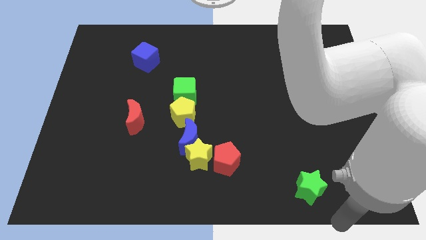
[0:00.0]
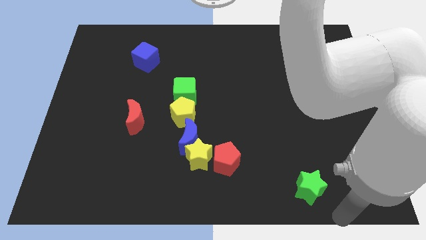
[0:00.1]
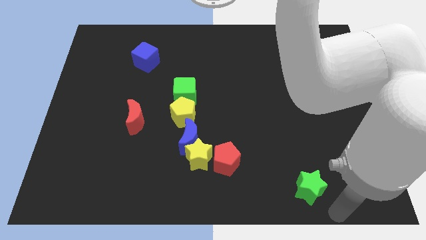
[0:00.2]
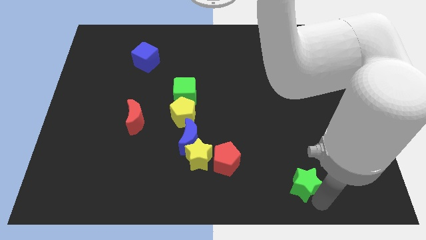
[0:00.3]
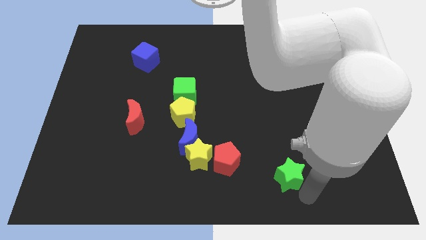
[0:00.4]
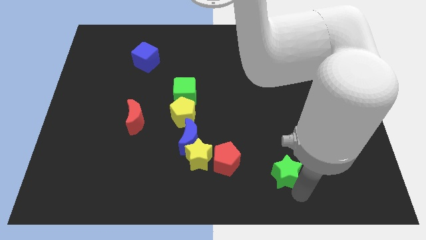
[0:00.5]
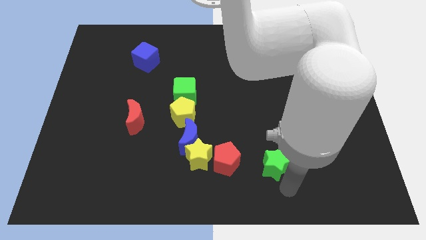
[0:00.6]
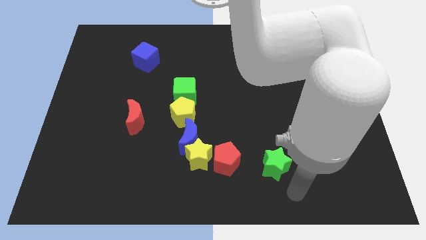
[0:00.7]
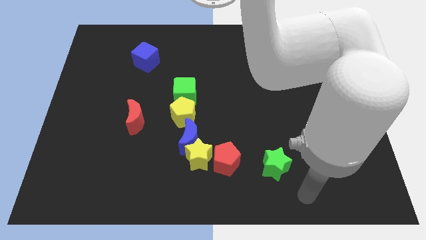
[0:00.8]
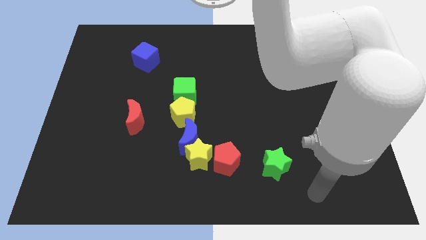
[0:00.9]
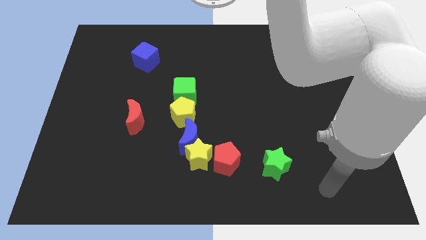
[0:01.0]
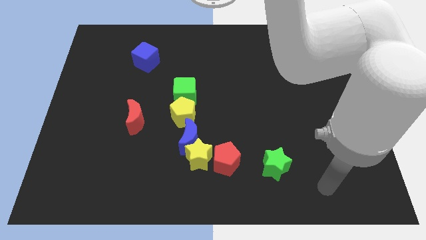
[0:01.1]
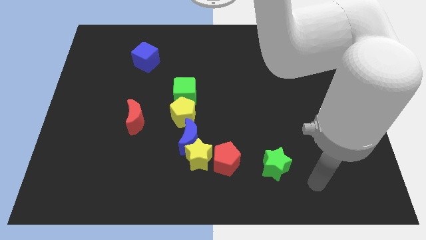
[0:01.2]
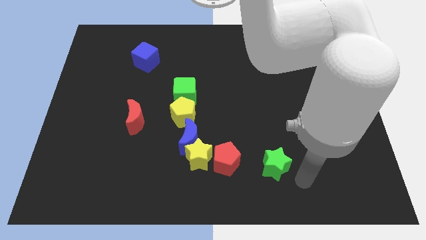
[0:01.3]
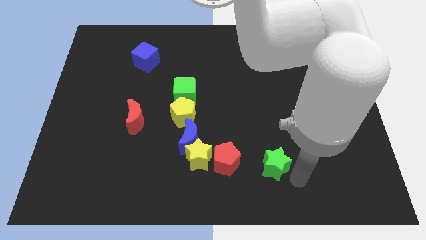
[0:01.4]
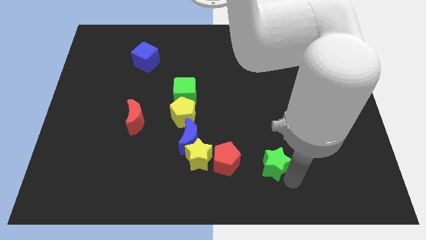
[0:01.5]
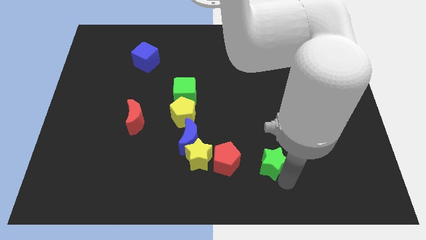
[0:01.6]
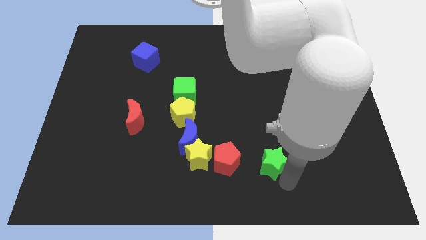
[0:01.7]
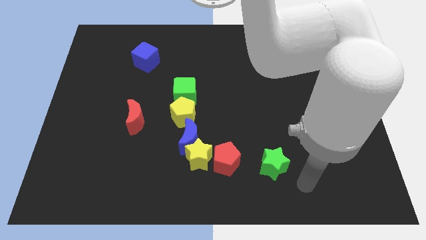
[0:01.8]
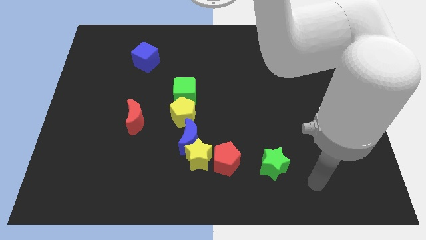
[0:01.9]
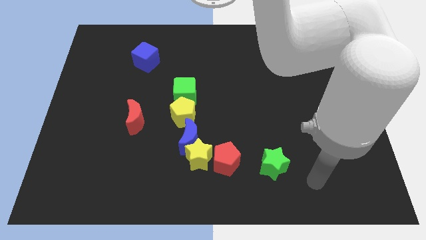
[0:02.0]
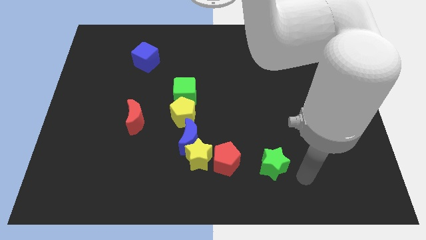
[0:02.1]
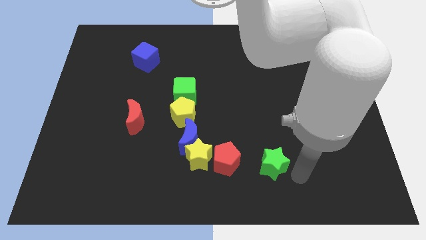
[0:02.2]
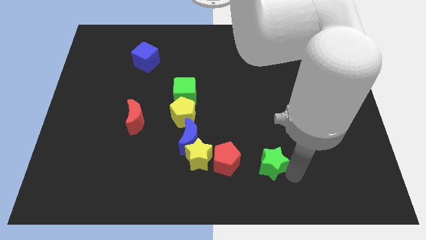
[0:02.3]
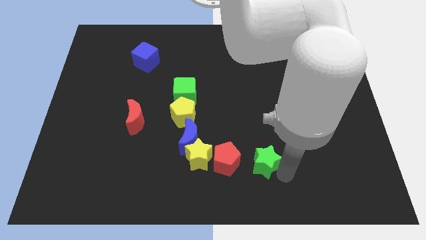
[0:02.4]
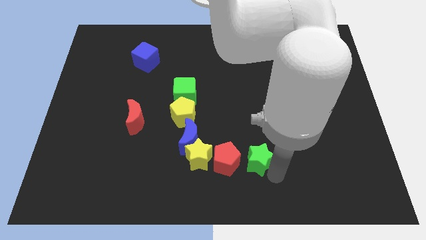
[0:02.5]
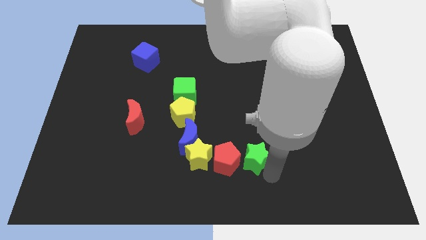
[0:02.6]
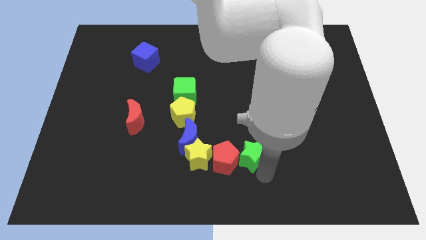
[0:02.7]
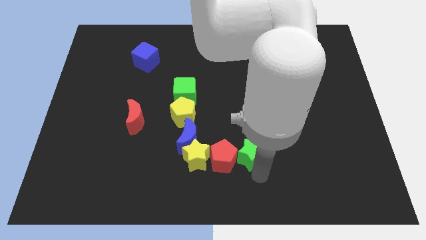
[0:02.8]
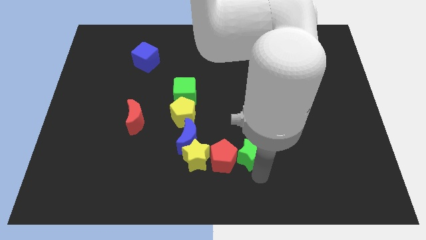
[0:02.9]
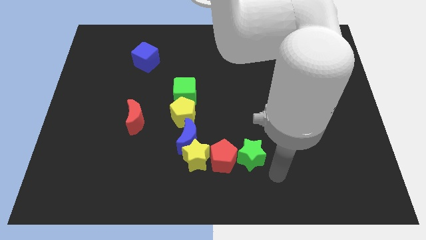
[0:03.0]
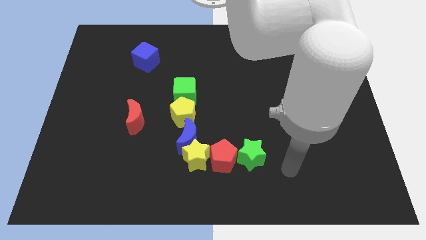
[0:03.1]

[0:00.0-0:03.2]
place the green star right to the red pentagon

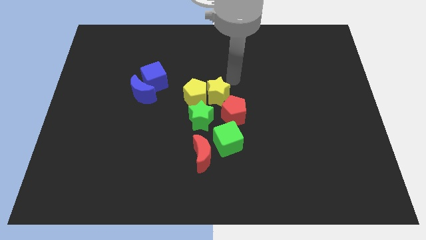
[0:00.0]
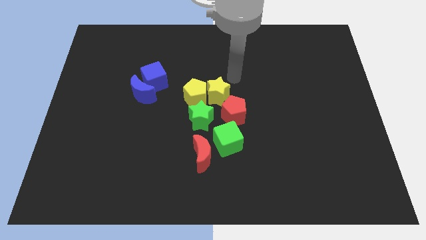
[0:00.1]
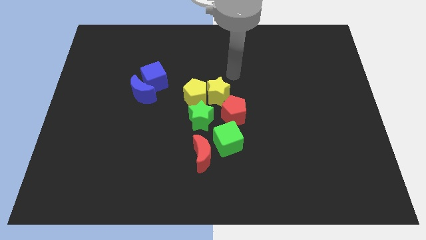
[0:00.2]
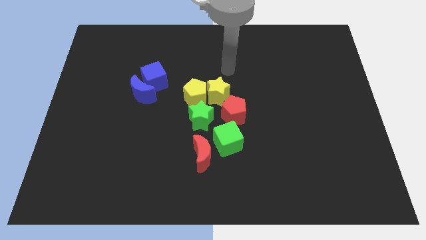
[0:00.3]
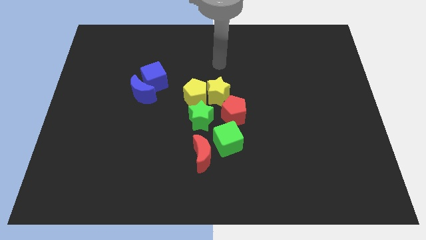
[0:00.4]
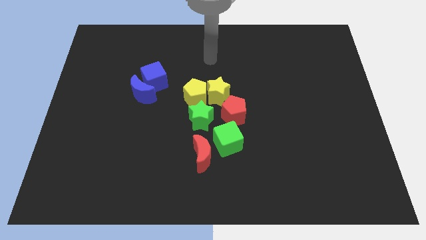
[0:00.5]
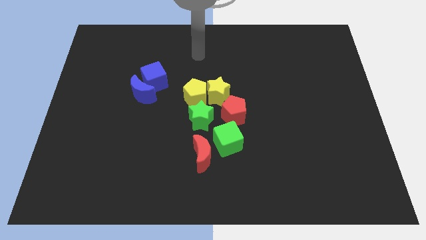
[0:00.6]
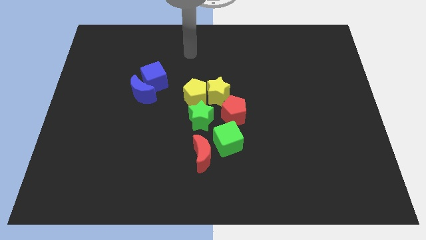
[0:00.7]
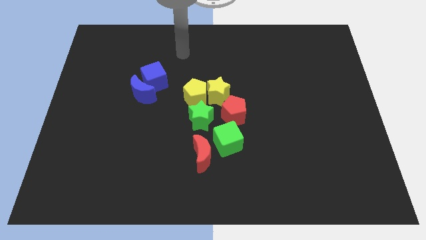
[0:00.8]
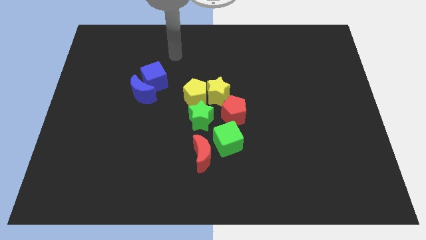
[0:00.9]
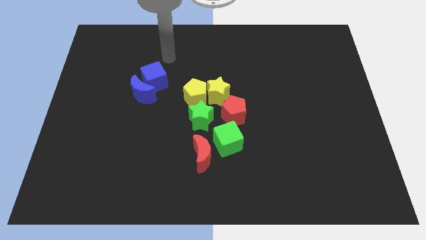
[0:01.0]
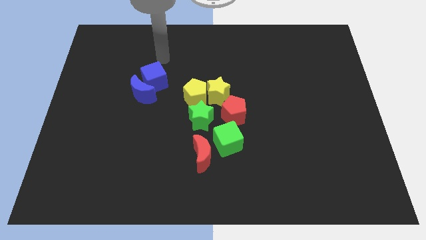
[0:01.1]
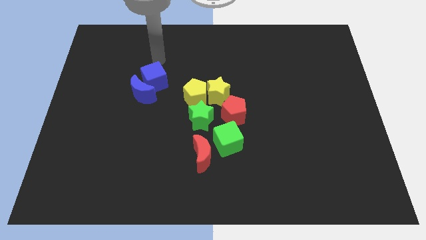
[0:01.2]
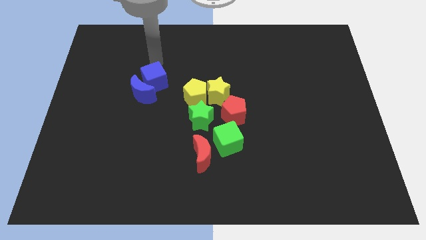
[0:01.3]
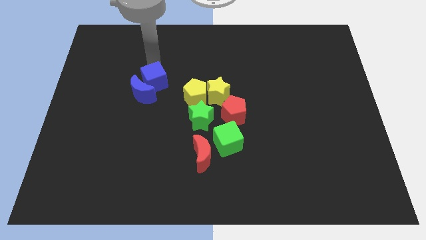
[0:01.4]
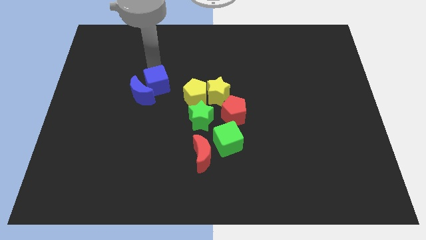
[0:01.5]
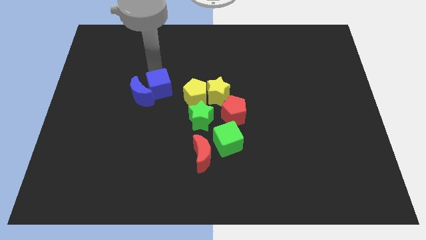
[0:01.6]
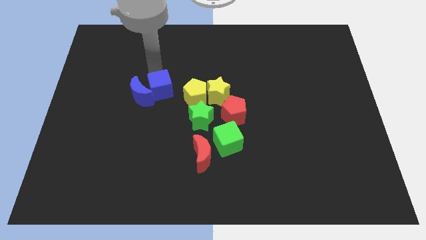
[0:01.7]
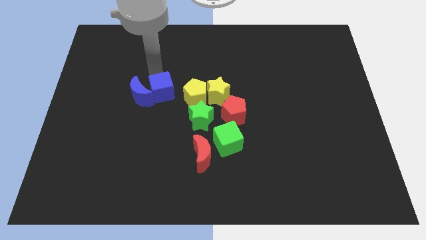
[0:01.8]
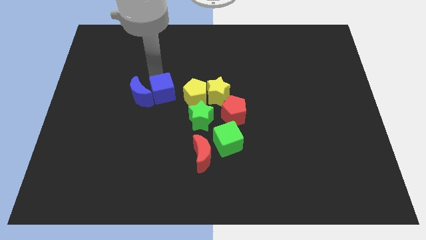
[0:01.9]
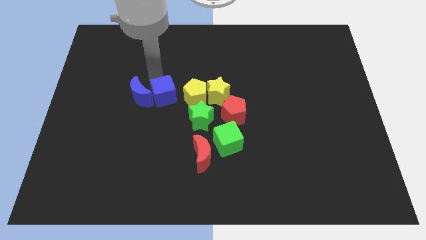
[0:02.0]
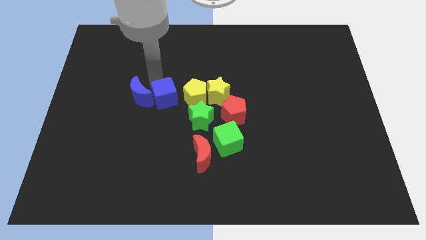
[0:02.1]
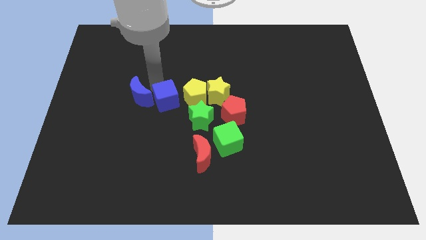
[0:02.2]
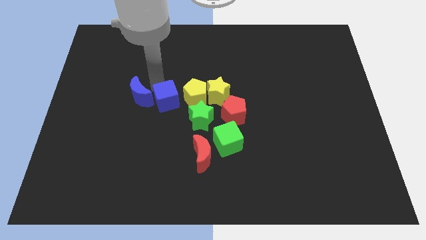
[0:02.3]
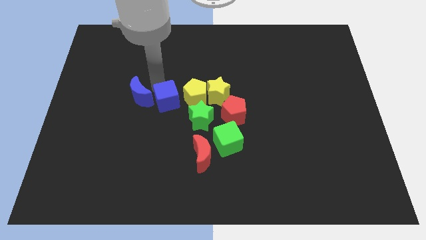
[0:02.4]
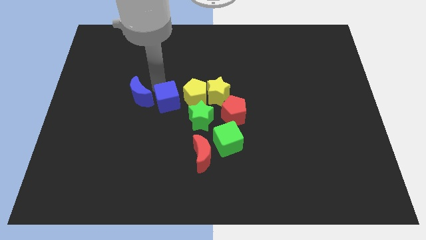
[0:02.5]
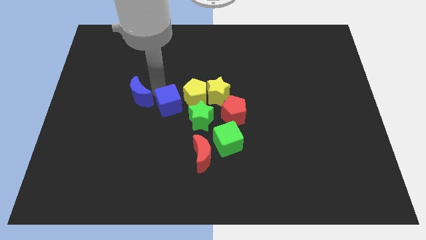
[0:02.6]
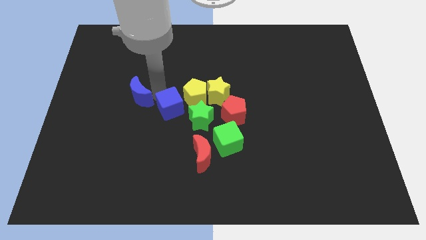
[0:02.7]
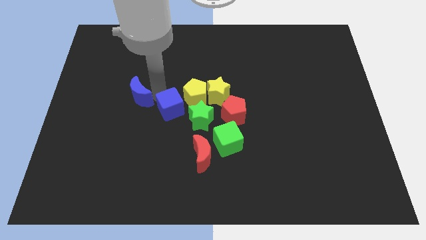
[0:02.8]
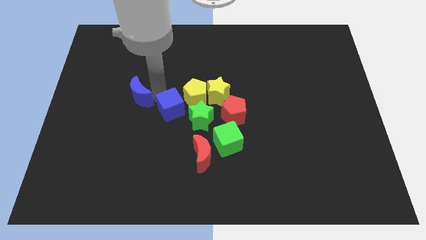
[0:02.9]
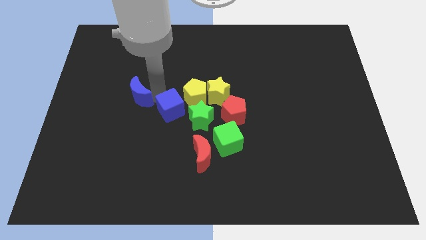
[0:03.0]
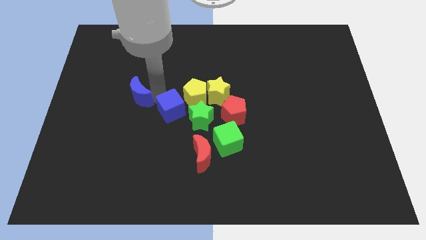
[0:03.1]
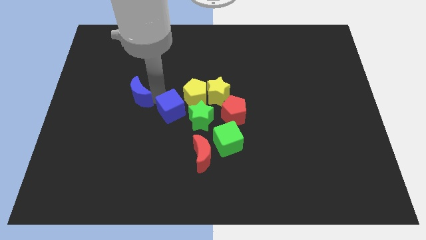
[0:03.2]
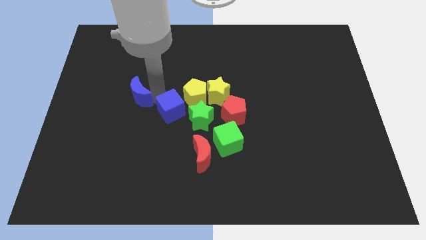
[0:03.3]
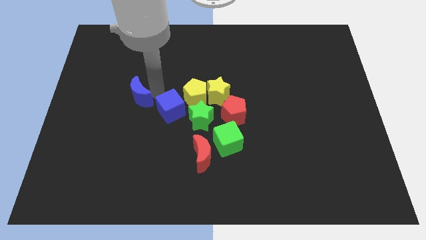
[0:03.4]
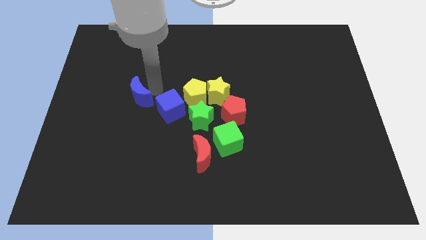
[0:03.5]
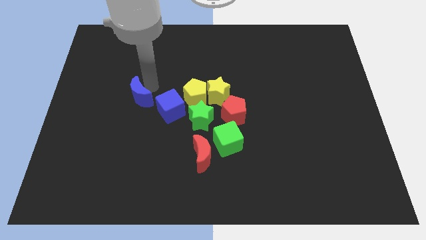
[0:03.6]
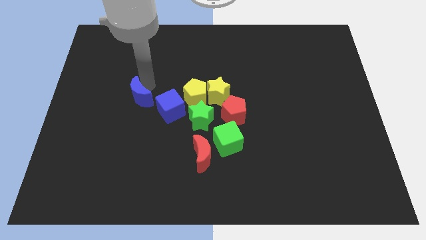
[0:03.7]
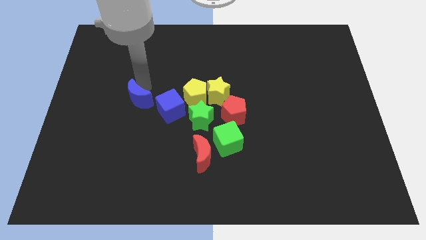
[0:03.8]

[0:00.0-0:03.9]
move the blue cube towards the green star

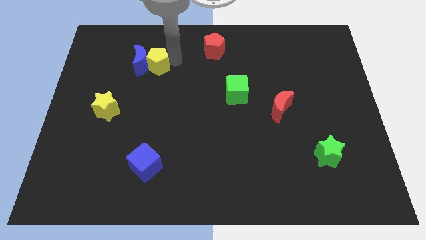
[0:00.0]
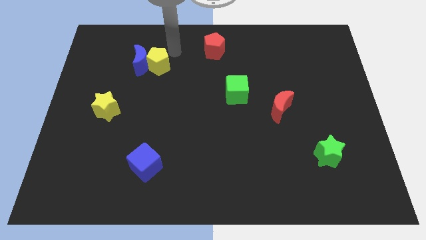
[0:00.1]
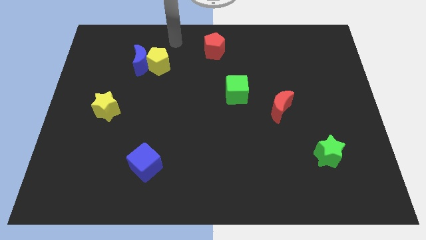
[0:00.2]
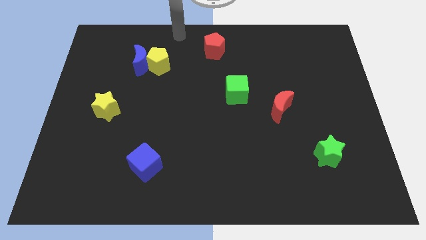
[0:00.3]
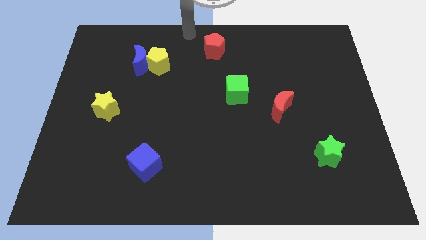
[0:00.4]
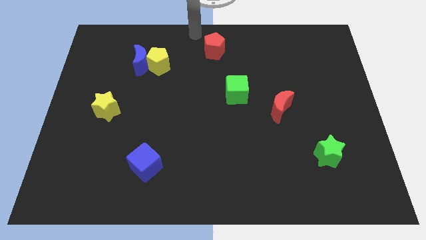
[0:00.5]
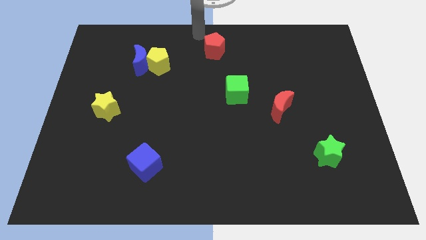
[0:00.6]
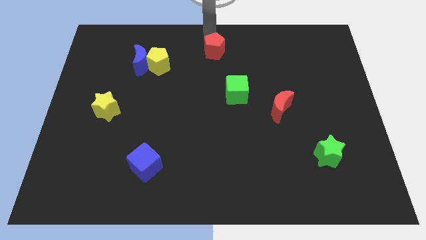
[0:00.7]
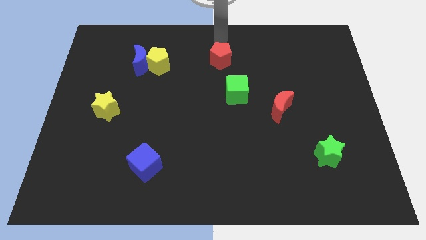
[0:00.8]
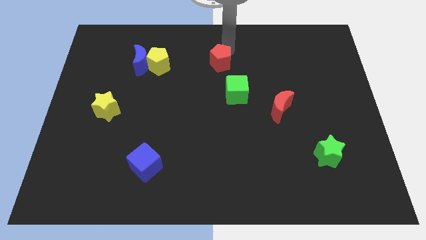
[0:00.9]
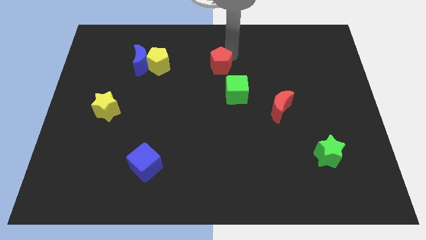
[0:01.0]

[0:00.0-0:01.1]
move your arm away from yellow pentagon

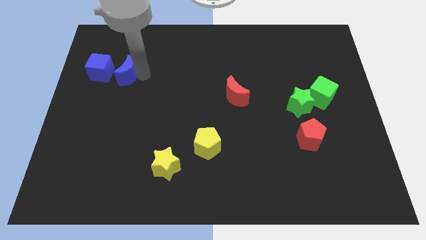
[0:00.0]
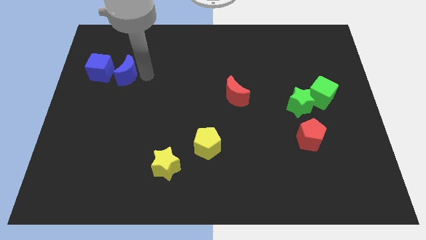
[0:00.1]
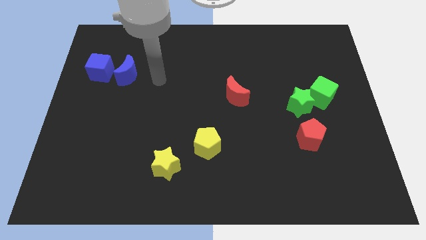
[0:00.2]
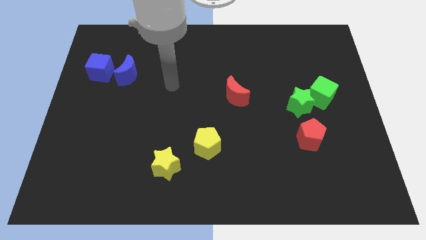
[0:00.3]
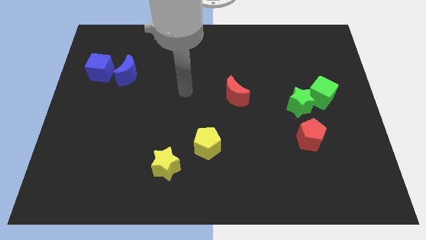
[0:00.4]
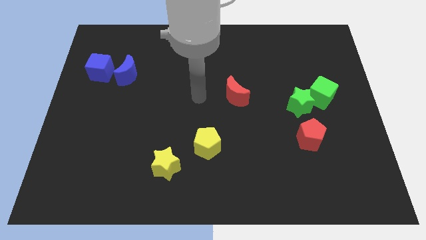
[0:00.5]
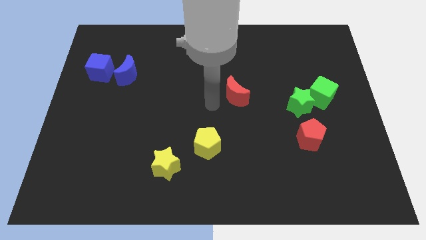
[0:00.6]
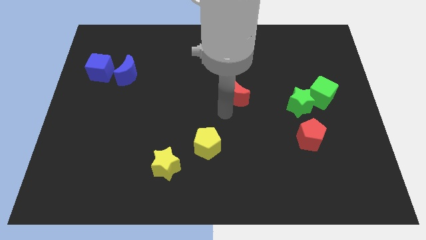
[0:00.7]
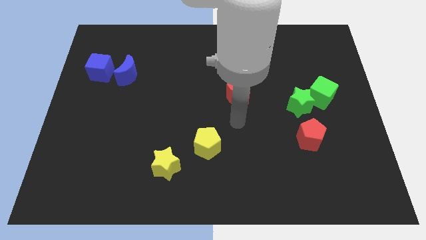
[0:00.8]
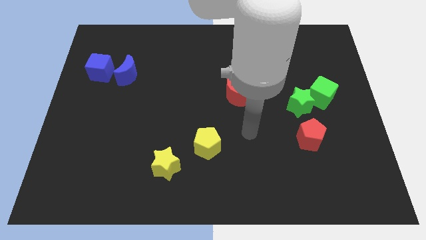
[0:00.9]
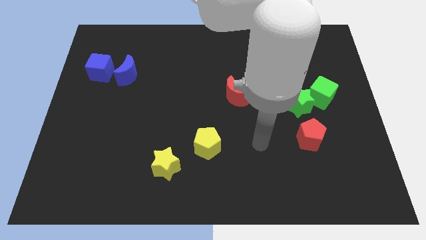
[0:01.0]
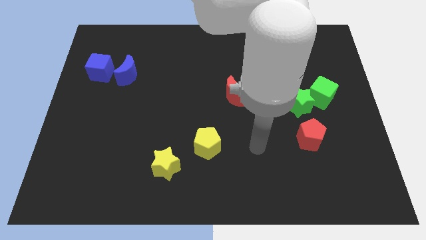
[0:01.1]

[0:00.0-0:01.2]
go away from the blue moon
